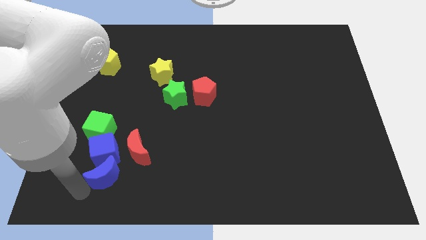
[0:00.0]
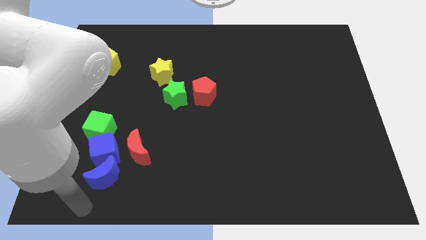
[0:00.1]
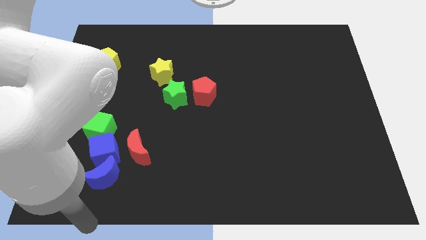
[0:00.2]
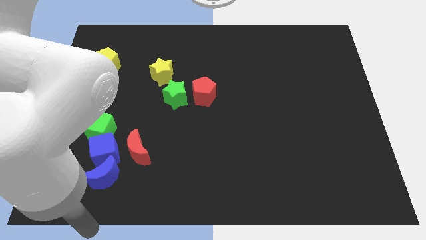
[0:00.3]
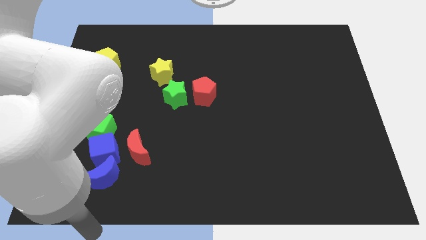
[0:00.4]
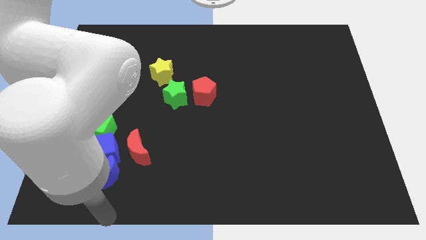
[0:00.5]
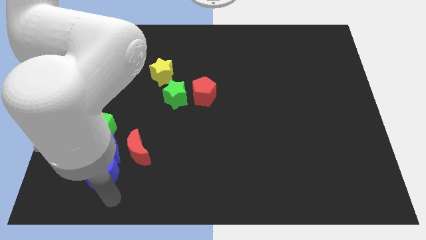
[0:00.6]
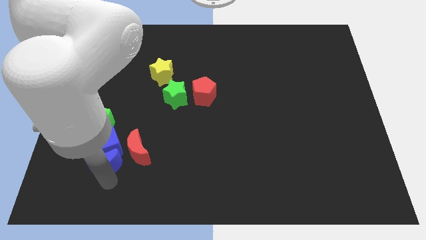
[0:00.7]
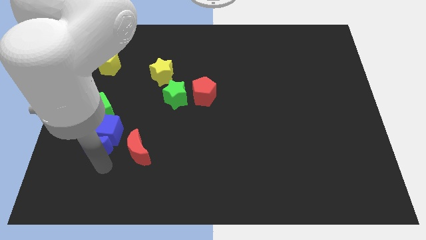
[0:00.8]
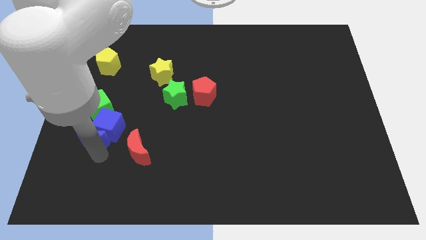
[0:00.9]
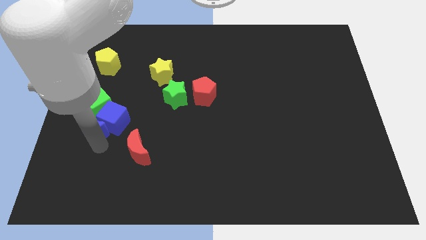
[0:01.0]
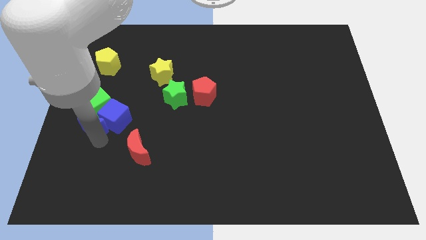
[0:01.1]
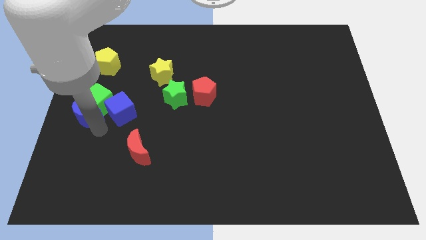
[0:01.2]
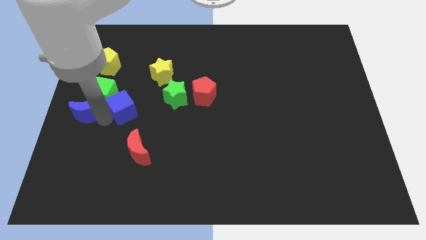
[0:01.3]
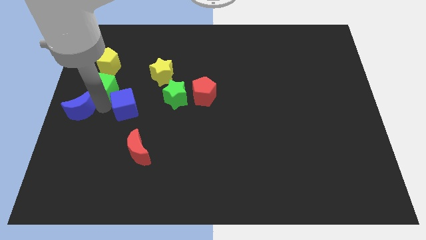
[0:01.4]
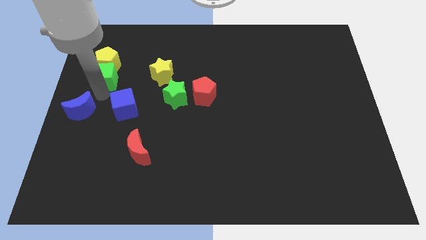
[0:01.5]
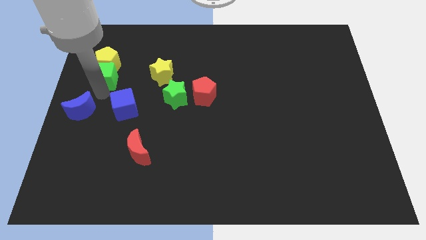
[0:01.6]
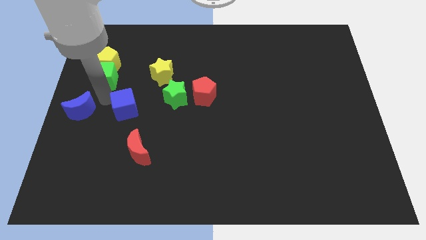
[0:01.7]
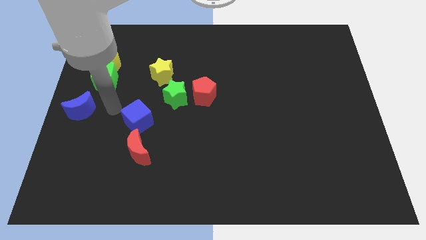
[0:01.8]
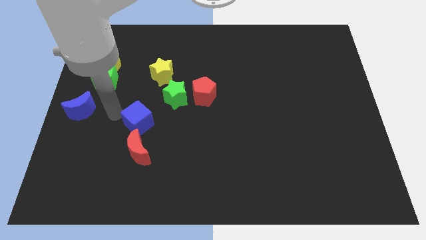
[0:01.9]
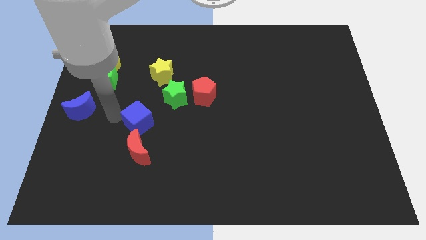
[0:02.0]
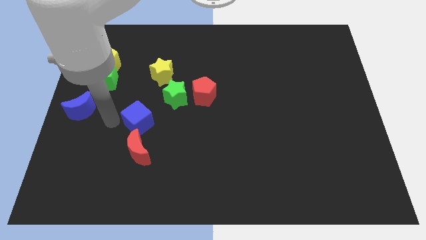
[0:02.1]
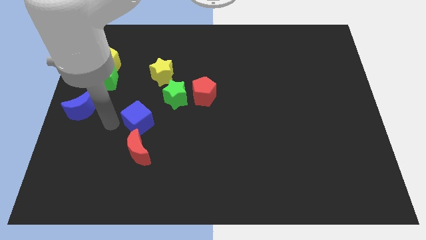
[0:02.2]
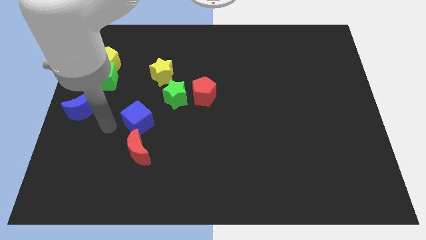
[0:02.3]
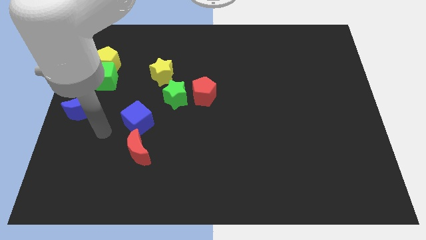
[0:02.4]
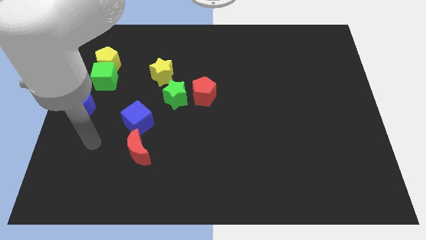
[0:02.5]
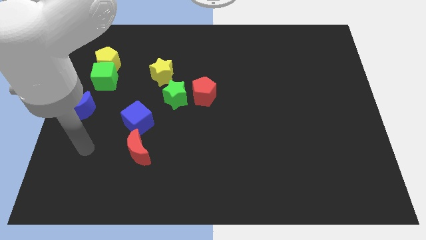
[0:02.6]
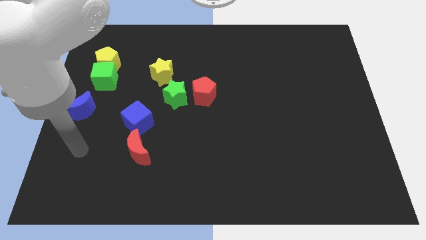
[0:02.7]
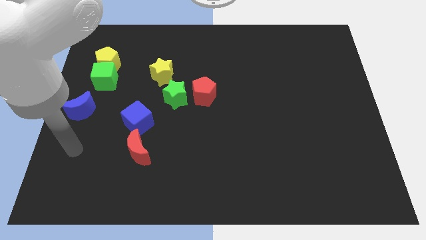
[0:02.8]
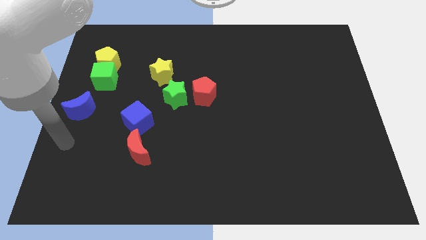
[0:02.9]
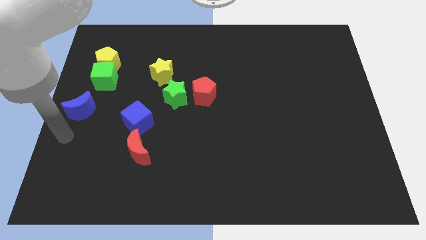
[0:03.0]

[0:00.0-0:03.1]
separate the blue blocks and the green cube

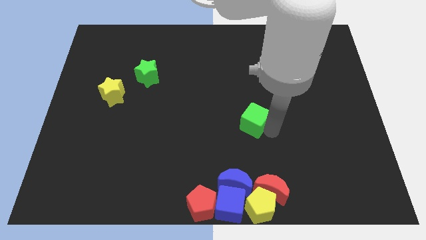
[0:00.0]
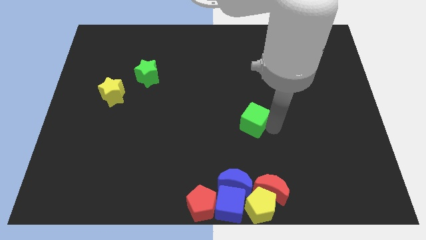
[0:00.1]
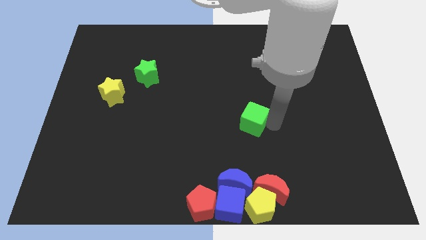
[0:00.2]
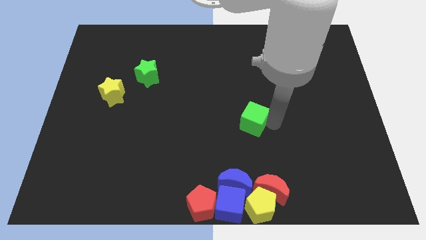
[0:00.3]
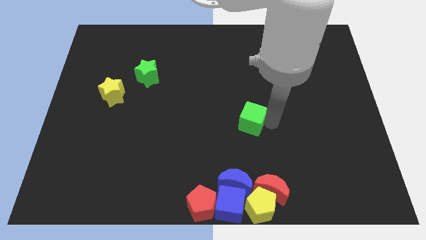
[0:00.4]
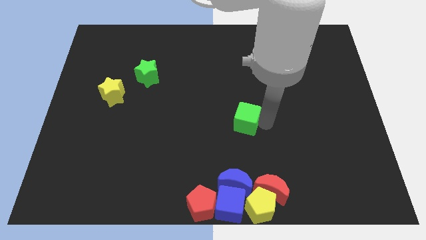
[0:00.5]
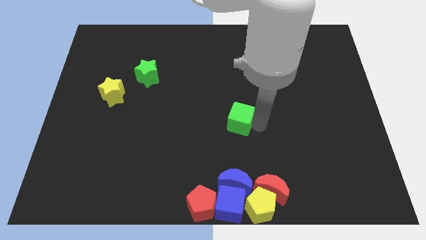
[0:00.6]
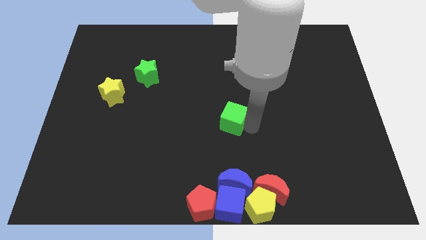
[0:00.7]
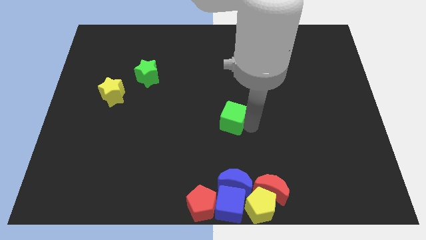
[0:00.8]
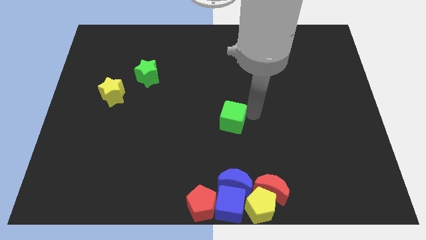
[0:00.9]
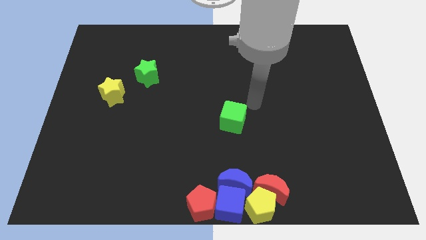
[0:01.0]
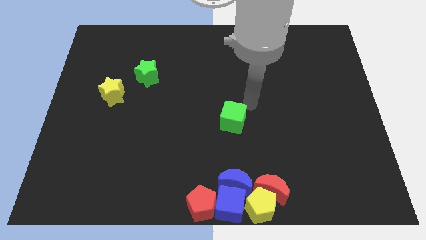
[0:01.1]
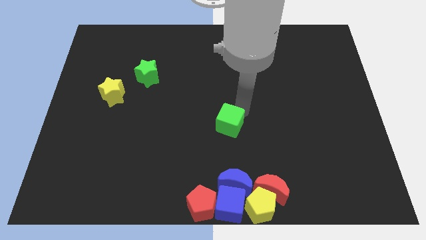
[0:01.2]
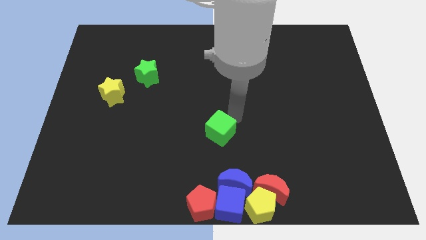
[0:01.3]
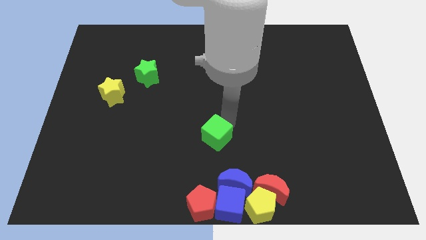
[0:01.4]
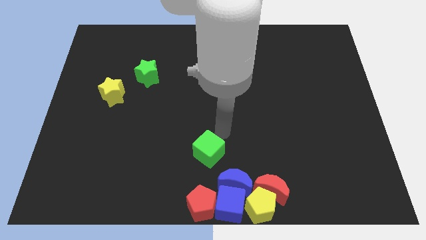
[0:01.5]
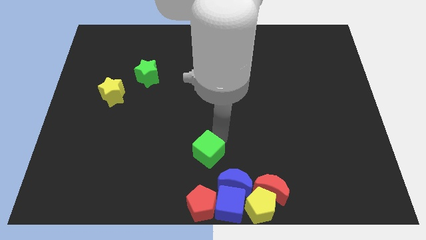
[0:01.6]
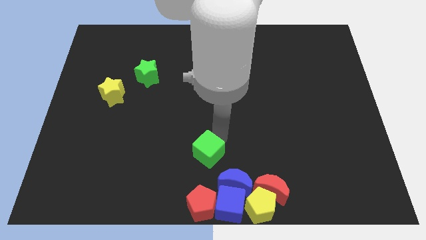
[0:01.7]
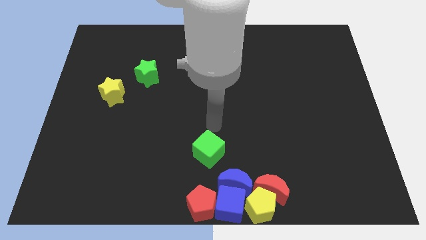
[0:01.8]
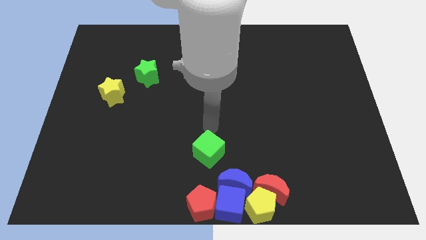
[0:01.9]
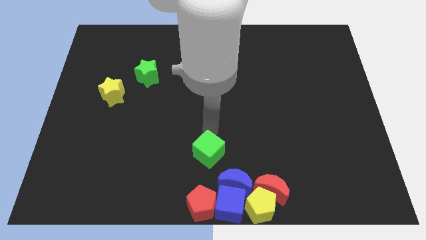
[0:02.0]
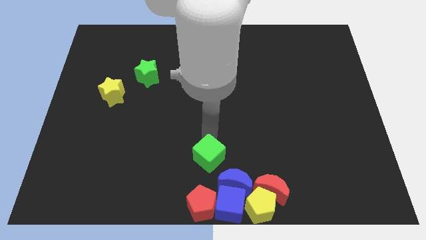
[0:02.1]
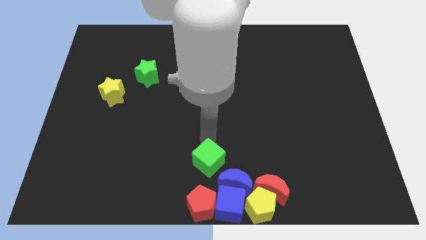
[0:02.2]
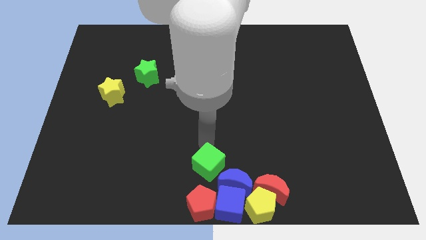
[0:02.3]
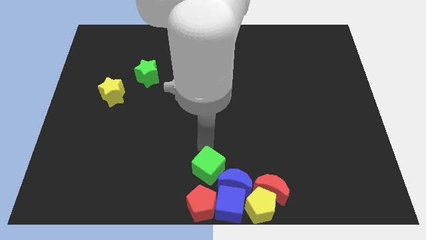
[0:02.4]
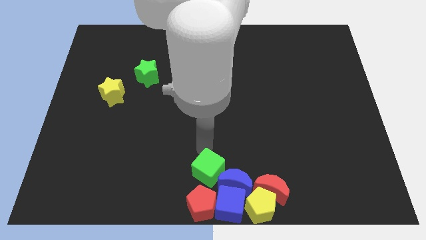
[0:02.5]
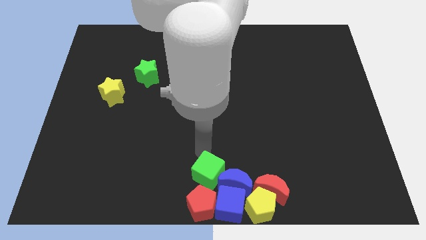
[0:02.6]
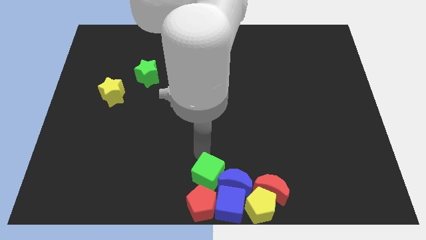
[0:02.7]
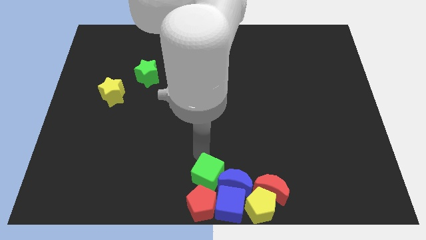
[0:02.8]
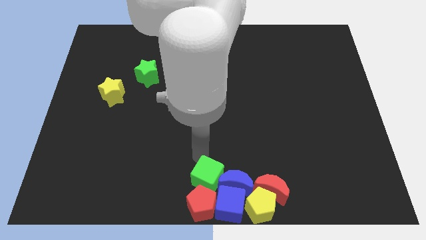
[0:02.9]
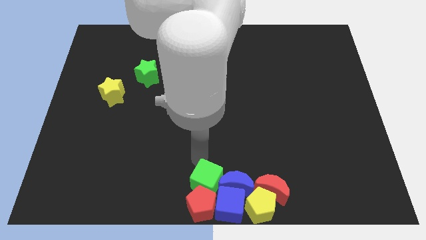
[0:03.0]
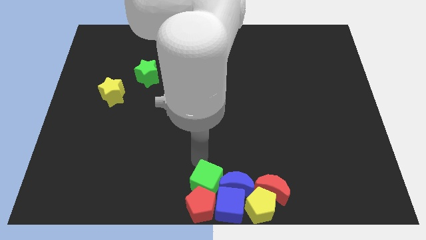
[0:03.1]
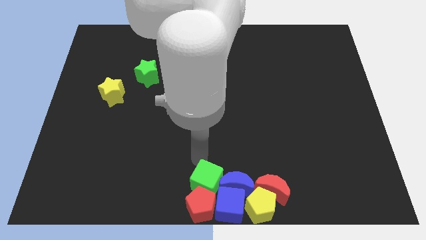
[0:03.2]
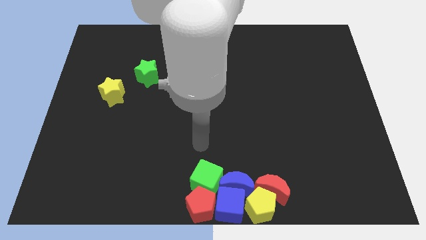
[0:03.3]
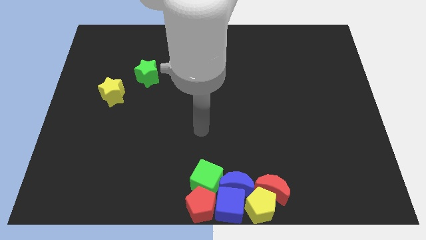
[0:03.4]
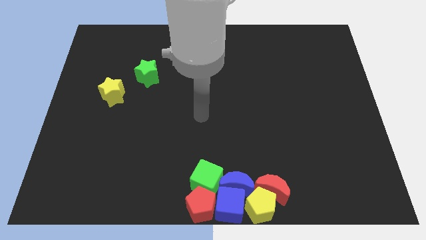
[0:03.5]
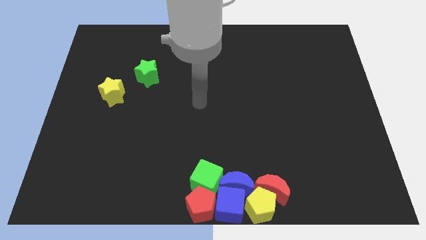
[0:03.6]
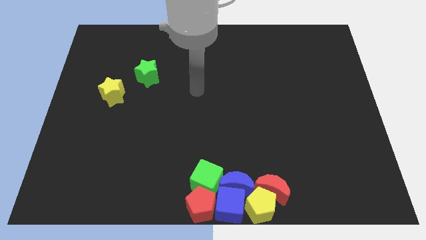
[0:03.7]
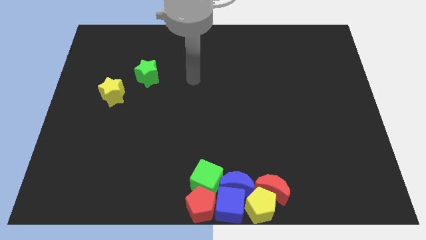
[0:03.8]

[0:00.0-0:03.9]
move the green cube into the red pentagon

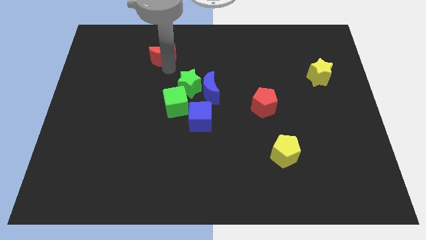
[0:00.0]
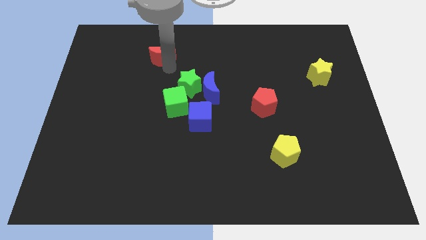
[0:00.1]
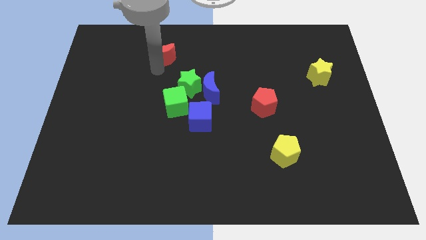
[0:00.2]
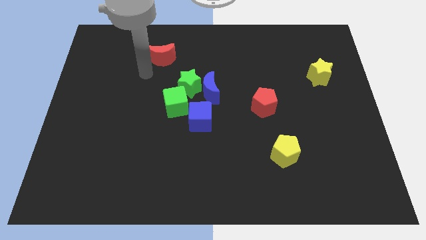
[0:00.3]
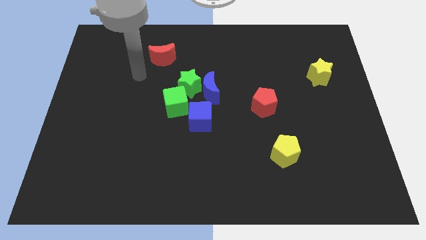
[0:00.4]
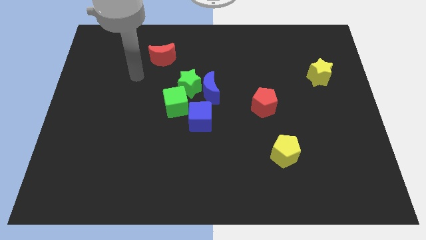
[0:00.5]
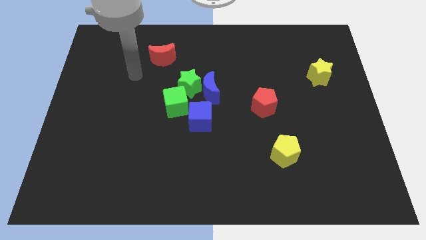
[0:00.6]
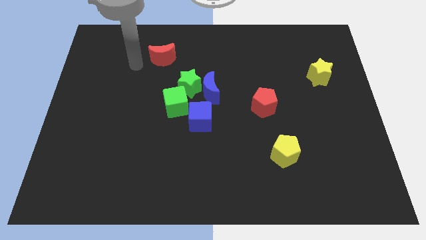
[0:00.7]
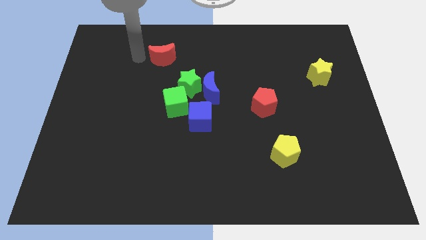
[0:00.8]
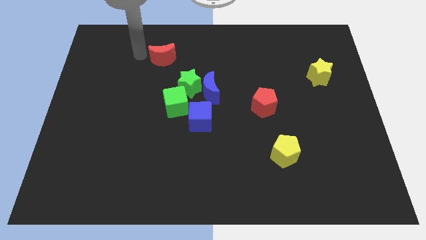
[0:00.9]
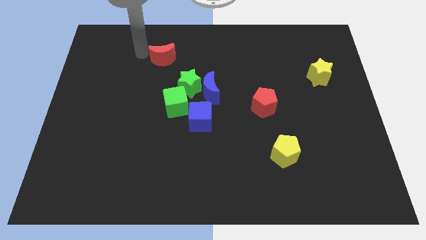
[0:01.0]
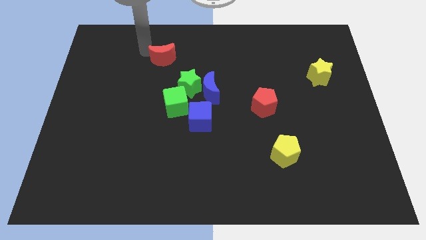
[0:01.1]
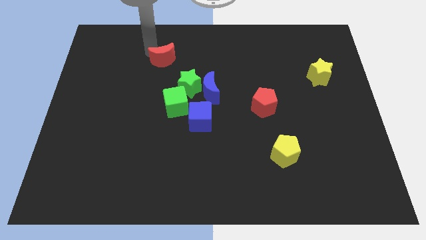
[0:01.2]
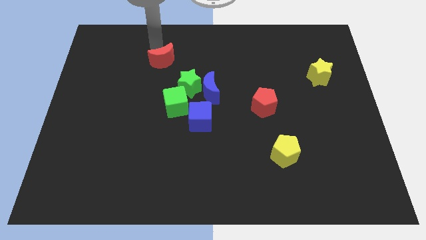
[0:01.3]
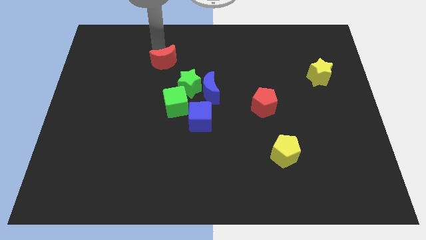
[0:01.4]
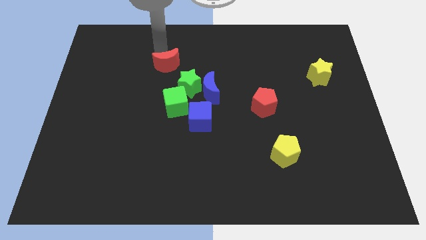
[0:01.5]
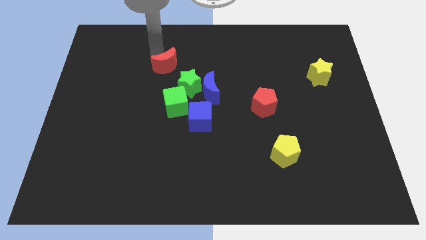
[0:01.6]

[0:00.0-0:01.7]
move red moon left above the green star

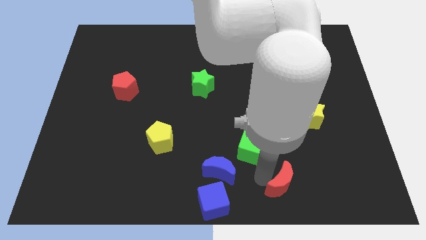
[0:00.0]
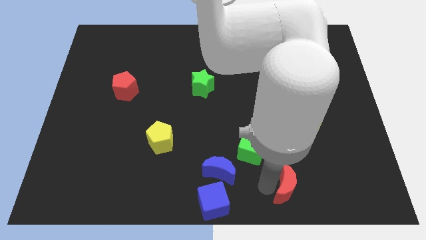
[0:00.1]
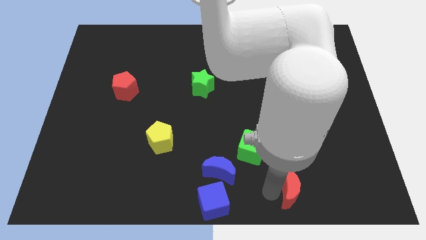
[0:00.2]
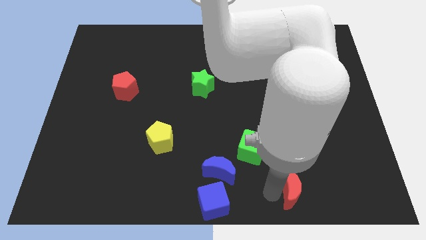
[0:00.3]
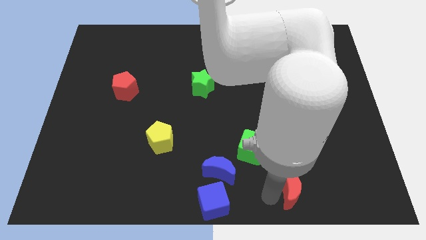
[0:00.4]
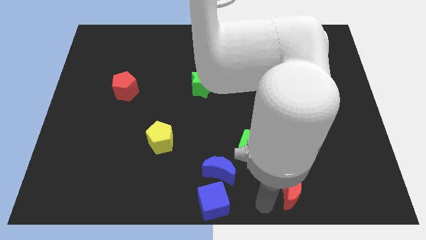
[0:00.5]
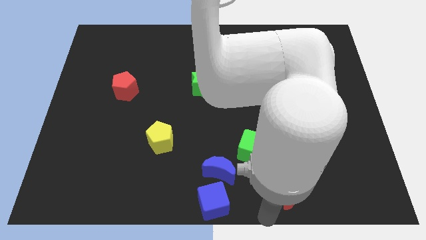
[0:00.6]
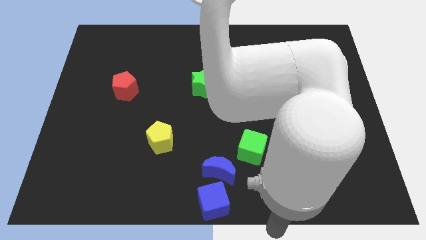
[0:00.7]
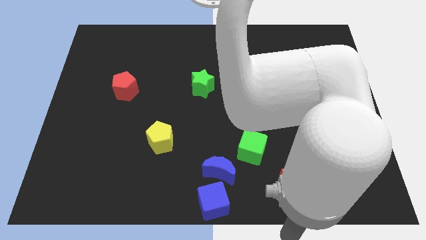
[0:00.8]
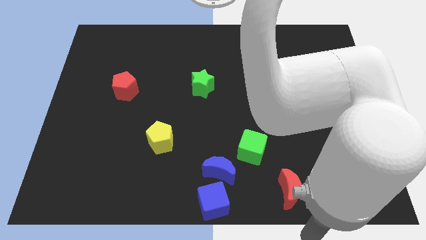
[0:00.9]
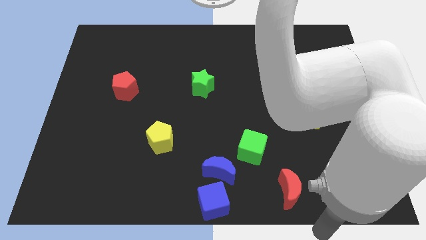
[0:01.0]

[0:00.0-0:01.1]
push red moon downwards
